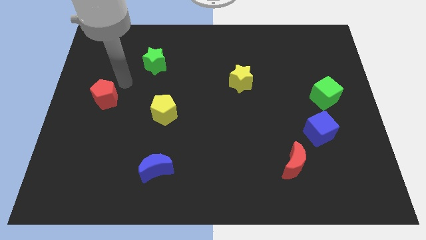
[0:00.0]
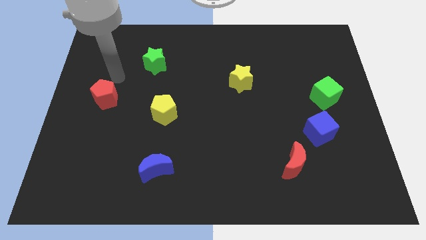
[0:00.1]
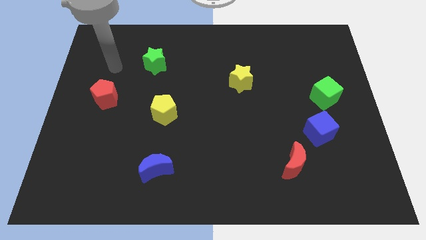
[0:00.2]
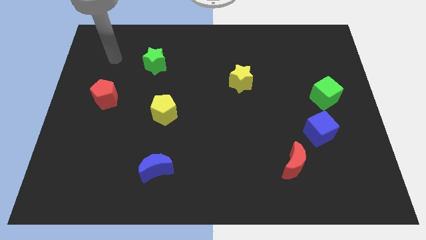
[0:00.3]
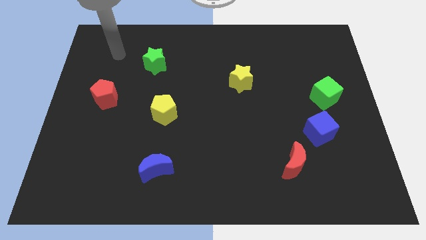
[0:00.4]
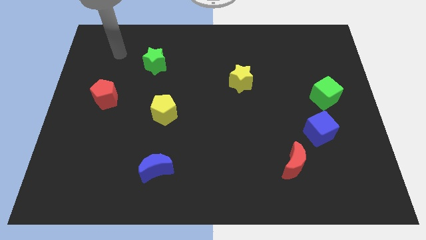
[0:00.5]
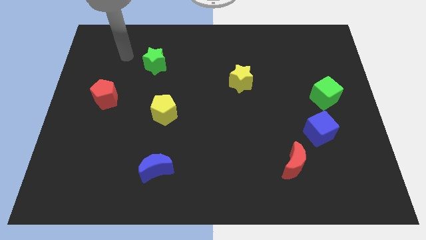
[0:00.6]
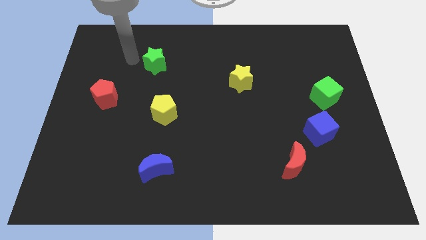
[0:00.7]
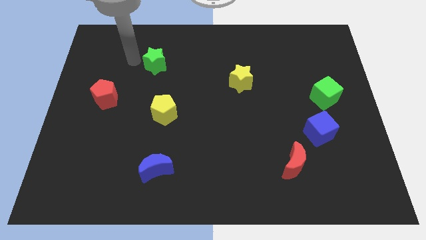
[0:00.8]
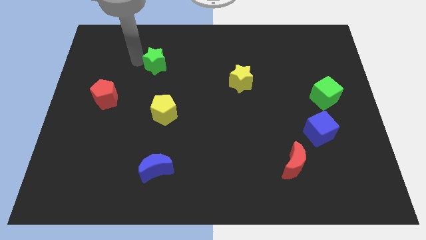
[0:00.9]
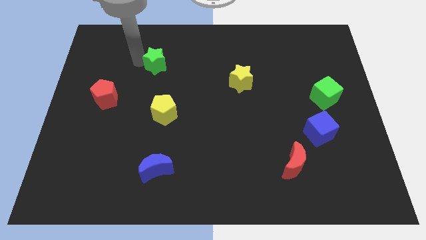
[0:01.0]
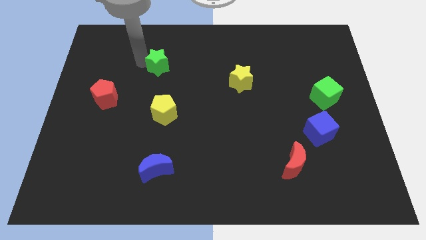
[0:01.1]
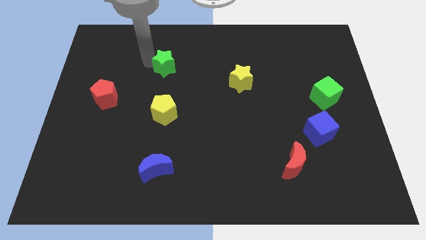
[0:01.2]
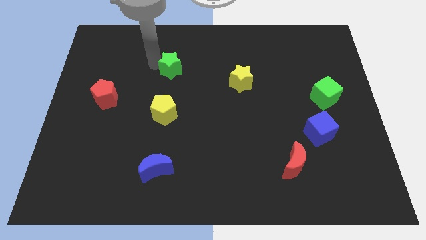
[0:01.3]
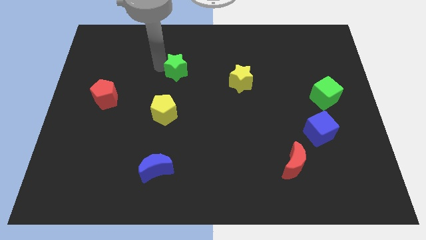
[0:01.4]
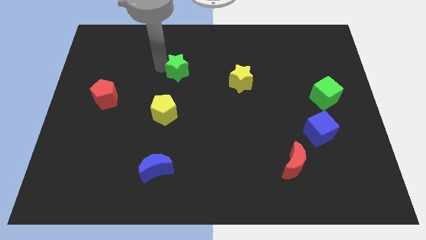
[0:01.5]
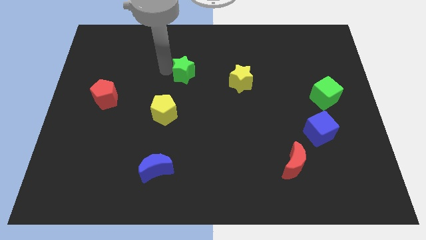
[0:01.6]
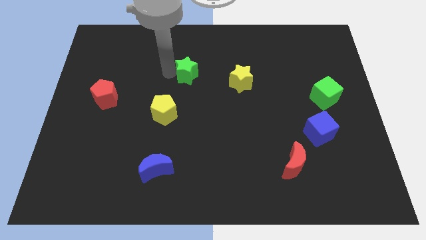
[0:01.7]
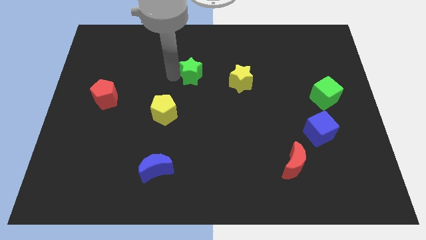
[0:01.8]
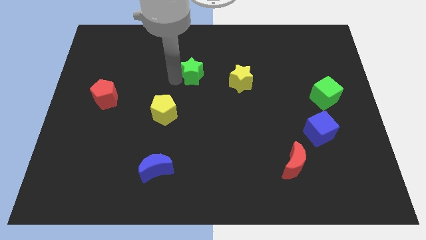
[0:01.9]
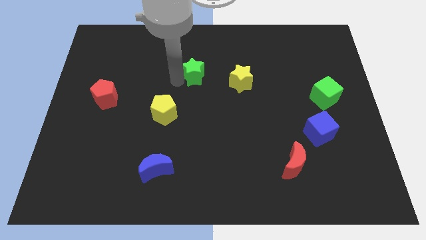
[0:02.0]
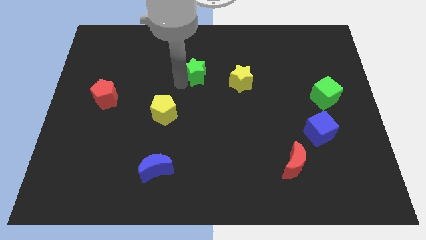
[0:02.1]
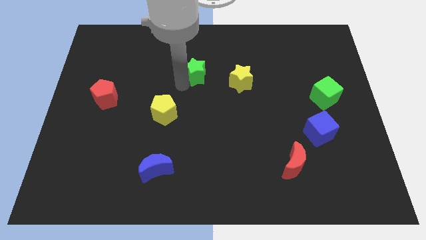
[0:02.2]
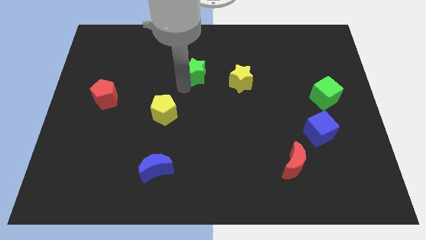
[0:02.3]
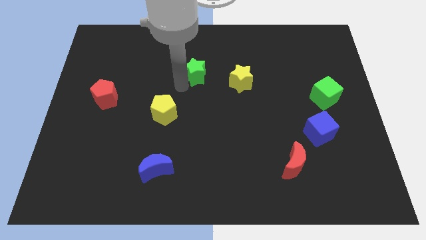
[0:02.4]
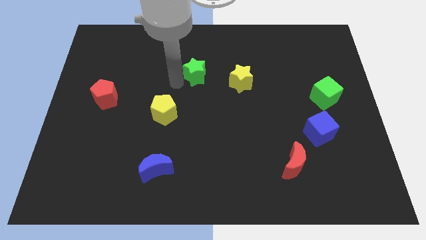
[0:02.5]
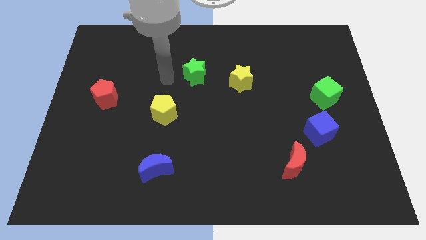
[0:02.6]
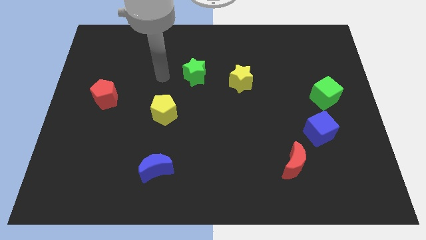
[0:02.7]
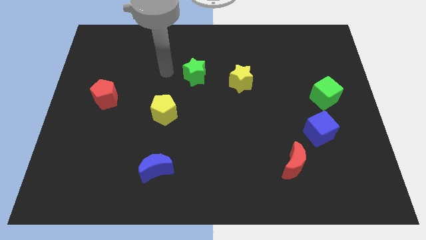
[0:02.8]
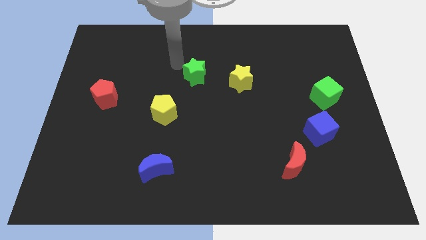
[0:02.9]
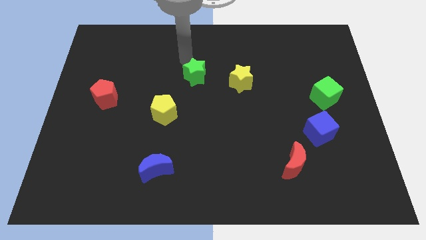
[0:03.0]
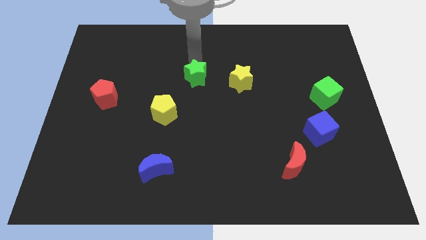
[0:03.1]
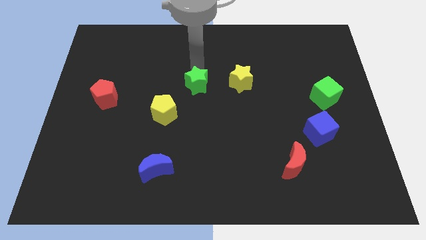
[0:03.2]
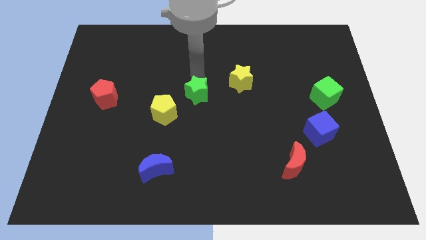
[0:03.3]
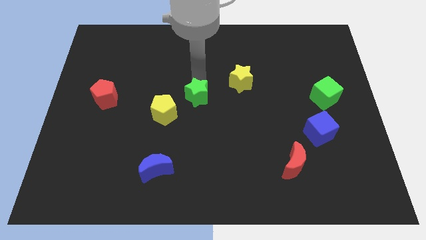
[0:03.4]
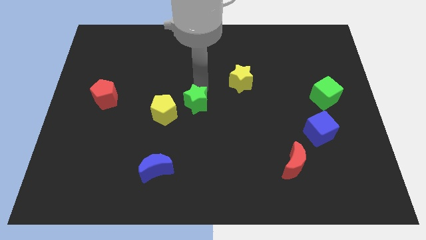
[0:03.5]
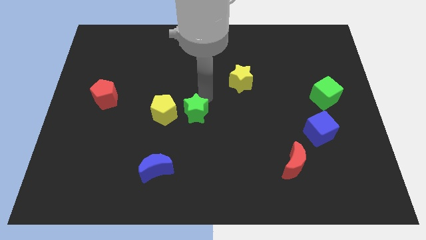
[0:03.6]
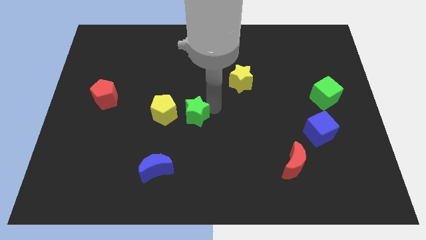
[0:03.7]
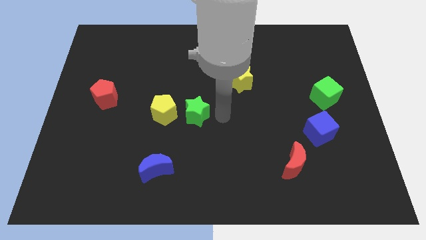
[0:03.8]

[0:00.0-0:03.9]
push the green star to the right side of the yellow pentagon

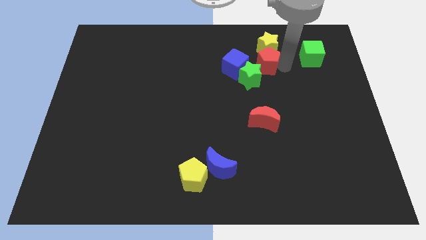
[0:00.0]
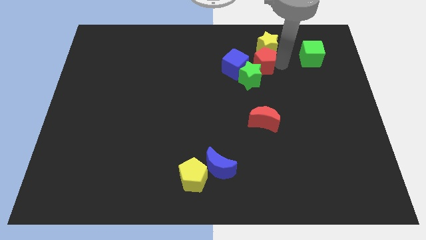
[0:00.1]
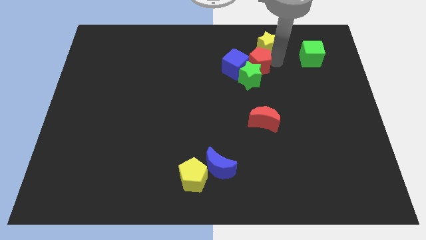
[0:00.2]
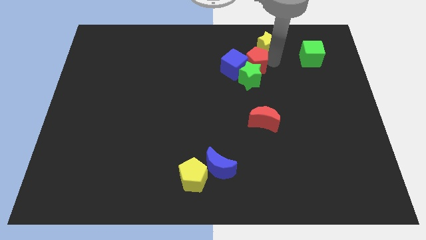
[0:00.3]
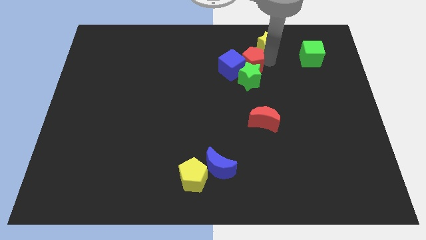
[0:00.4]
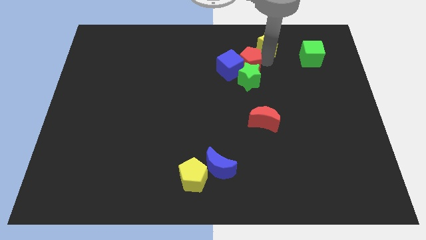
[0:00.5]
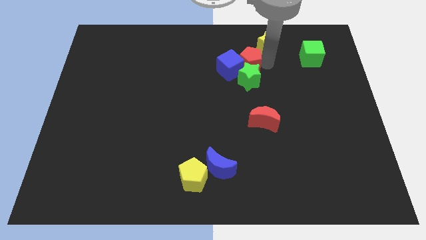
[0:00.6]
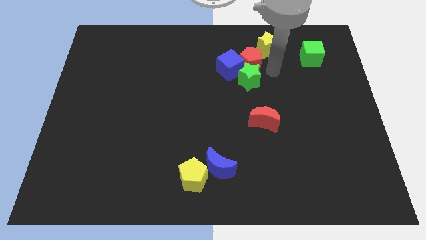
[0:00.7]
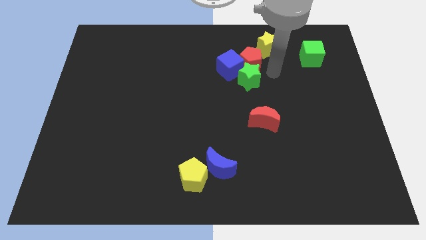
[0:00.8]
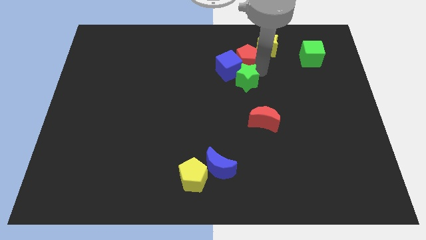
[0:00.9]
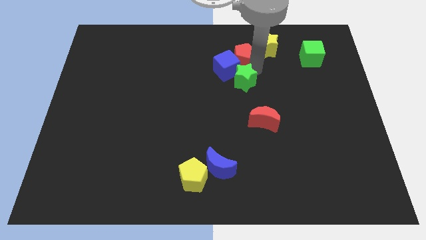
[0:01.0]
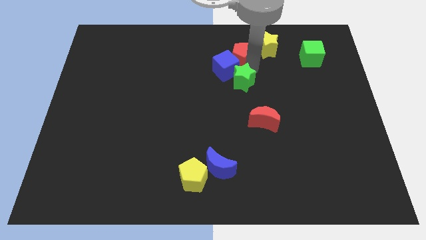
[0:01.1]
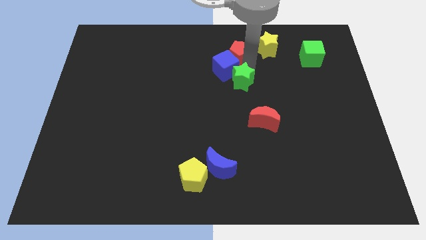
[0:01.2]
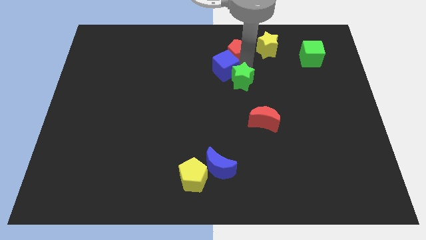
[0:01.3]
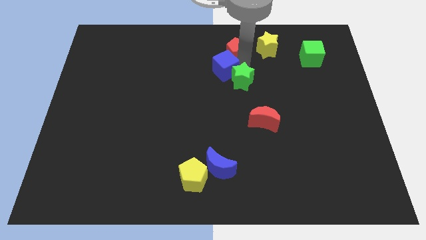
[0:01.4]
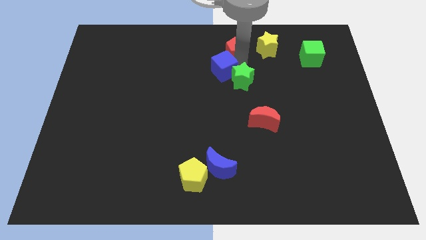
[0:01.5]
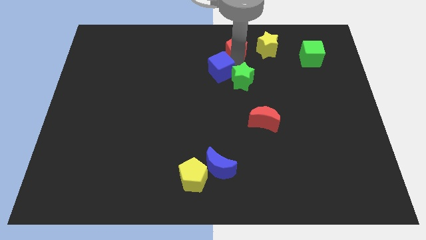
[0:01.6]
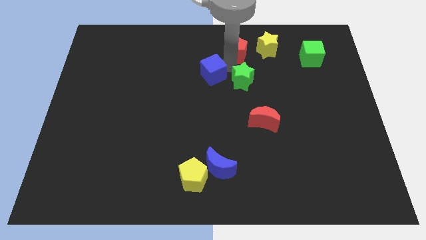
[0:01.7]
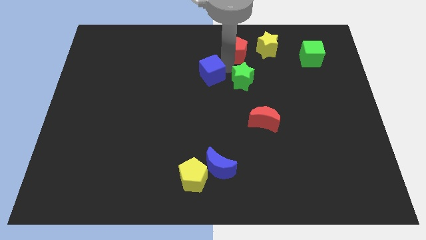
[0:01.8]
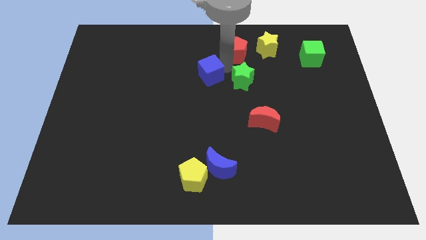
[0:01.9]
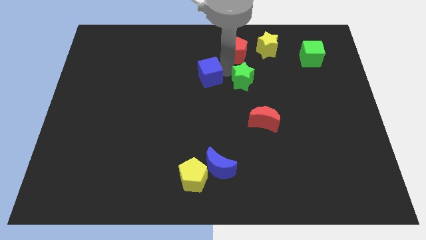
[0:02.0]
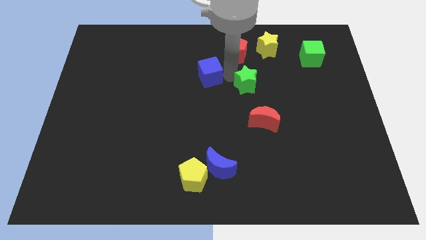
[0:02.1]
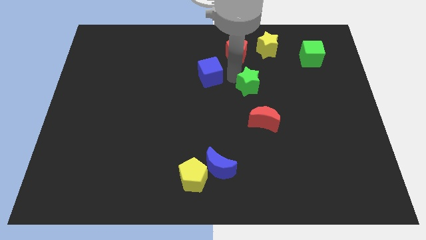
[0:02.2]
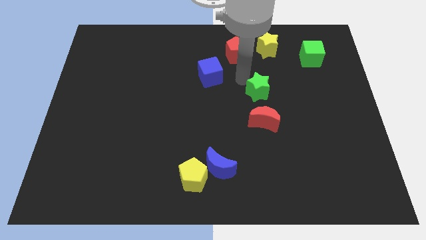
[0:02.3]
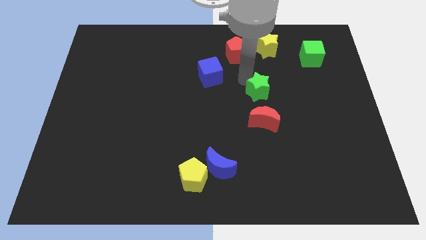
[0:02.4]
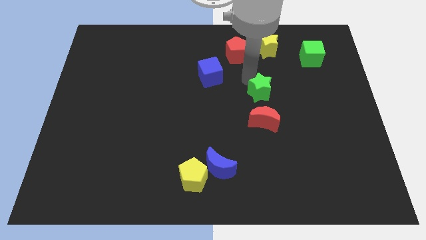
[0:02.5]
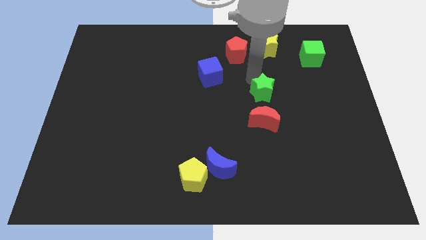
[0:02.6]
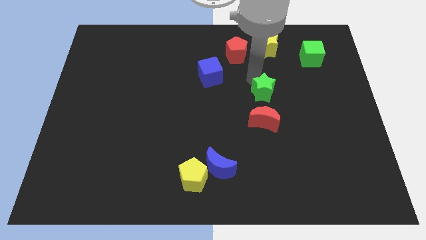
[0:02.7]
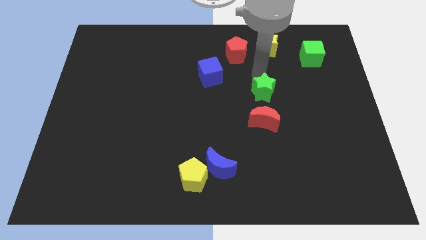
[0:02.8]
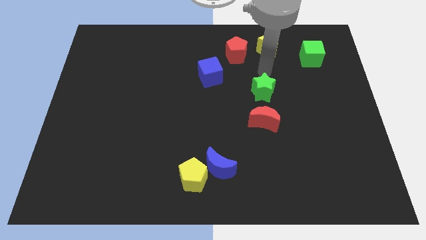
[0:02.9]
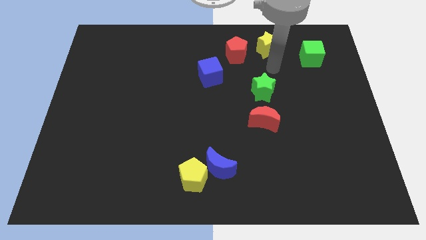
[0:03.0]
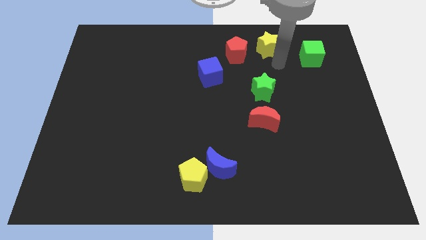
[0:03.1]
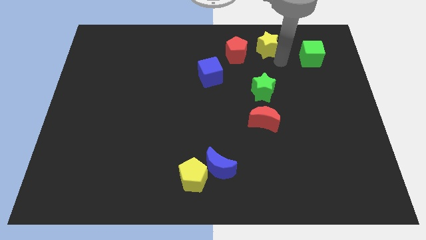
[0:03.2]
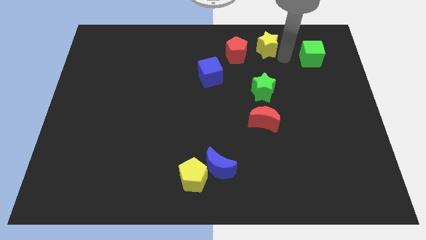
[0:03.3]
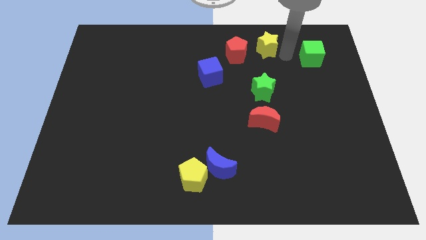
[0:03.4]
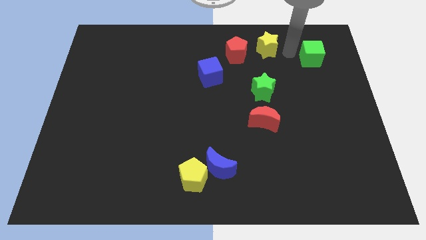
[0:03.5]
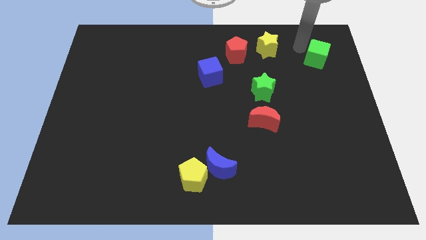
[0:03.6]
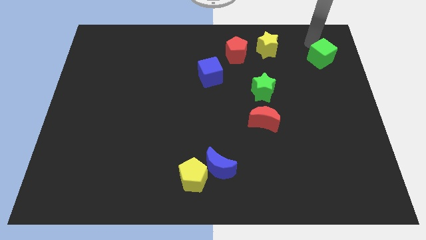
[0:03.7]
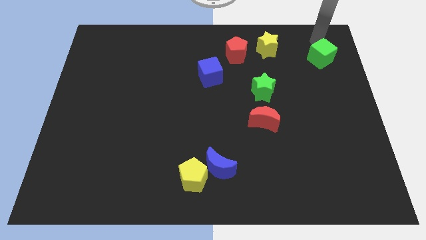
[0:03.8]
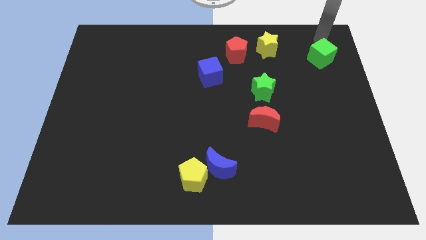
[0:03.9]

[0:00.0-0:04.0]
slightly touch left to the green cube

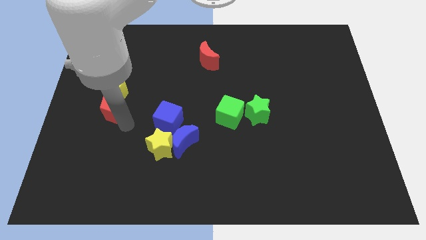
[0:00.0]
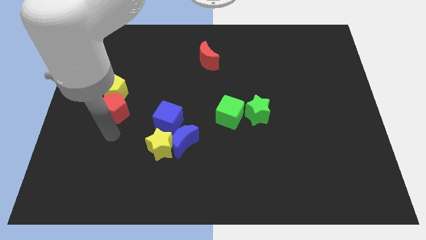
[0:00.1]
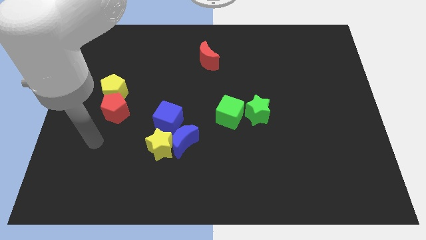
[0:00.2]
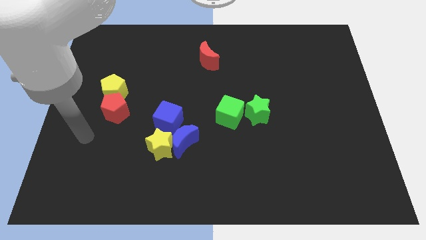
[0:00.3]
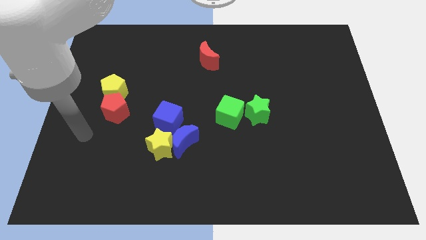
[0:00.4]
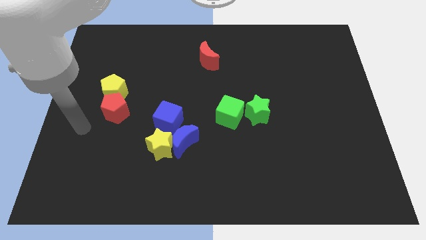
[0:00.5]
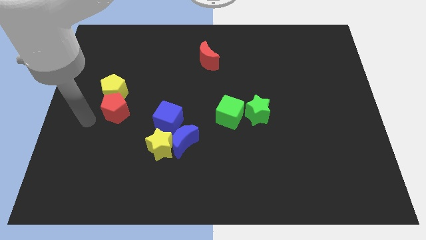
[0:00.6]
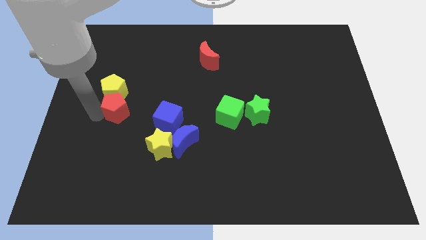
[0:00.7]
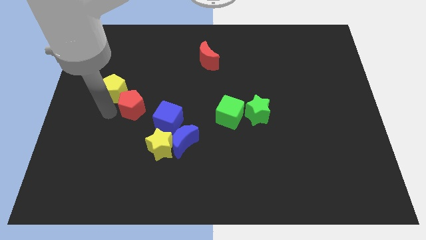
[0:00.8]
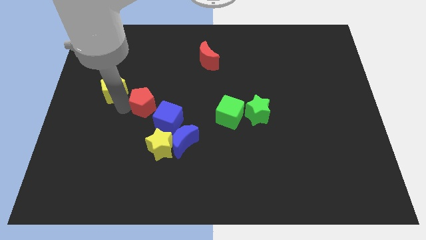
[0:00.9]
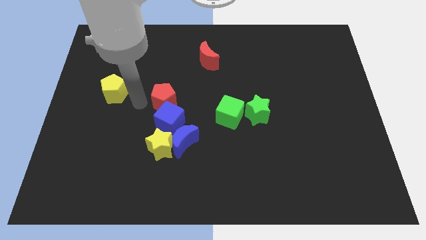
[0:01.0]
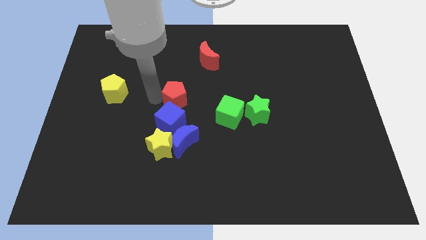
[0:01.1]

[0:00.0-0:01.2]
place the red pentagon on top of blue cube
